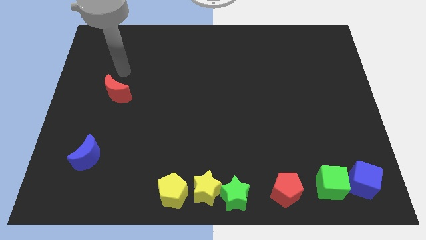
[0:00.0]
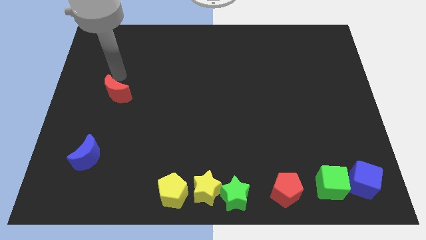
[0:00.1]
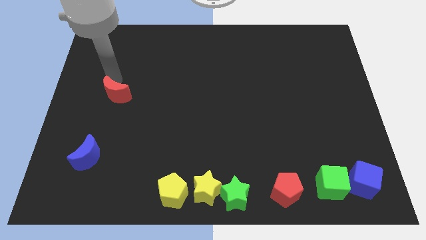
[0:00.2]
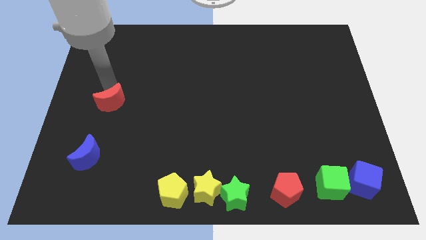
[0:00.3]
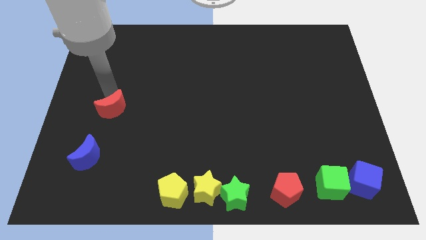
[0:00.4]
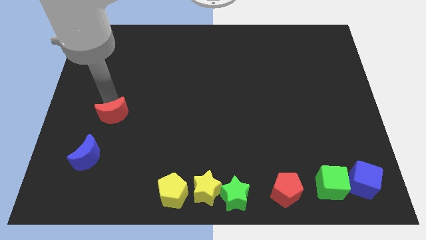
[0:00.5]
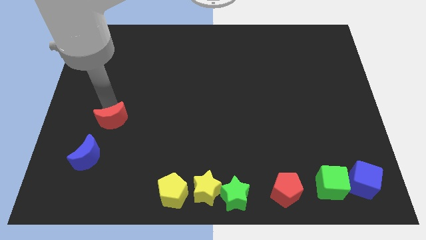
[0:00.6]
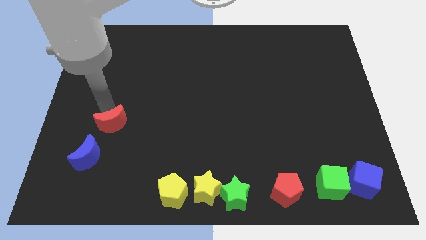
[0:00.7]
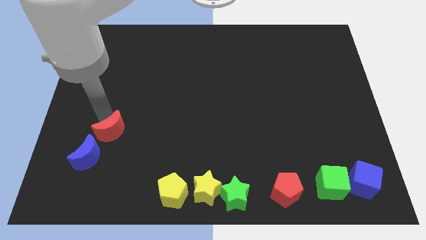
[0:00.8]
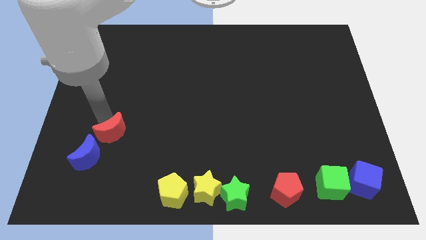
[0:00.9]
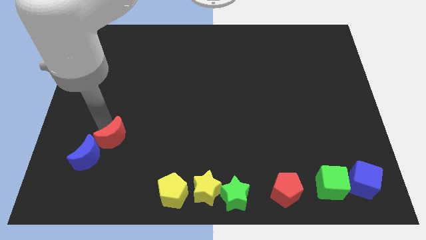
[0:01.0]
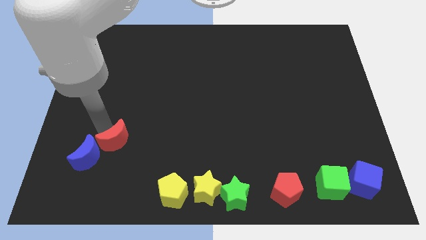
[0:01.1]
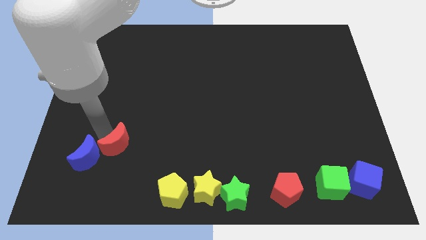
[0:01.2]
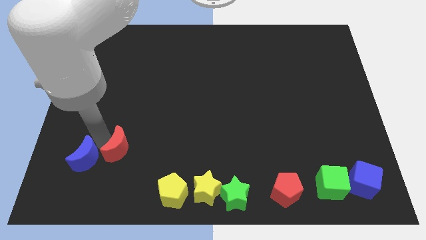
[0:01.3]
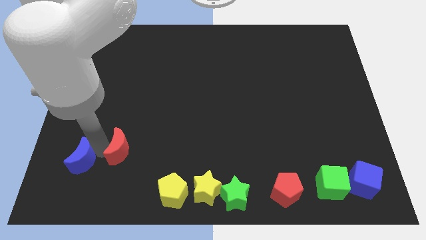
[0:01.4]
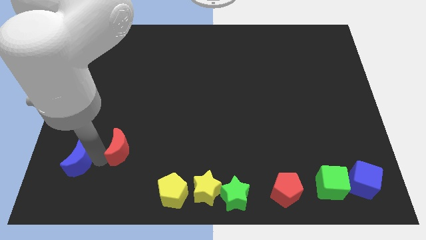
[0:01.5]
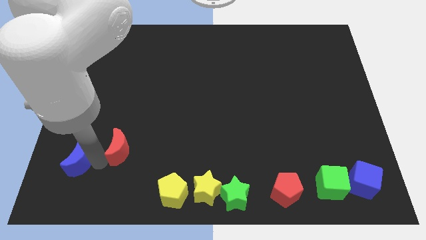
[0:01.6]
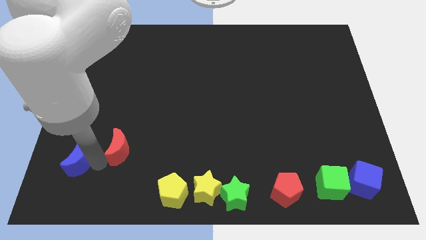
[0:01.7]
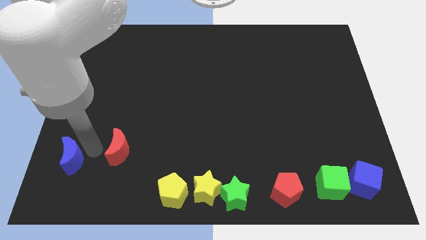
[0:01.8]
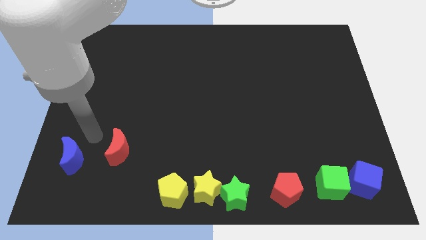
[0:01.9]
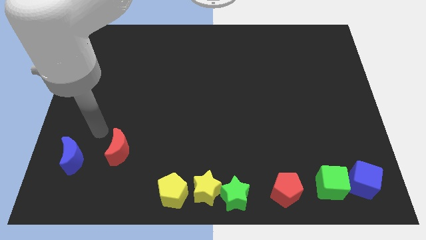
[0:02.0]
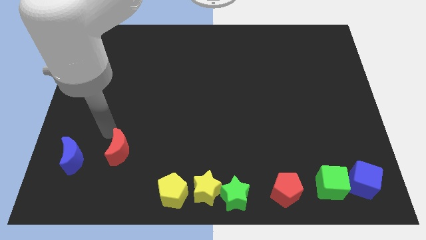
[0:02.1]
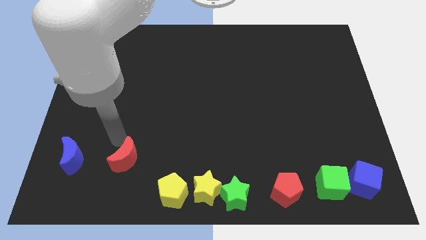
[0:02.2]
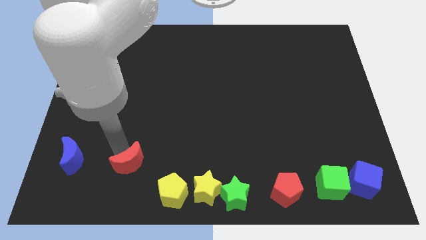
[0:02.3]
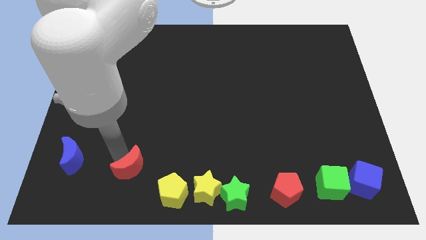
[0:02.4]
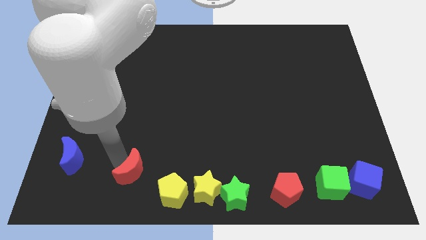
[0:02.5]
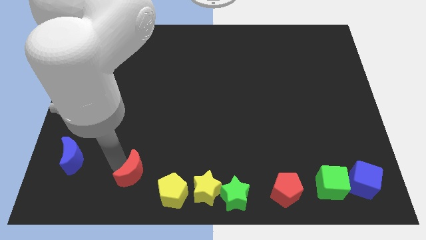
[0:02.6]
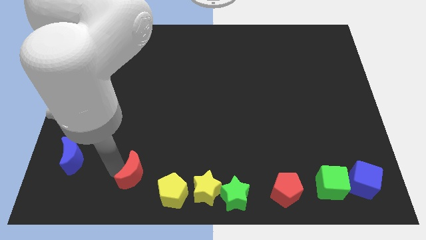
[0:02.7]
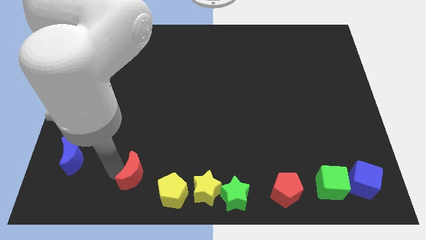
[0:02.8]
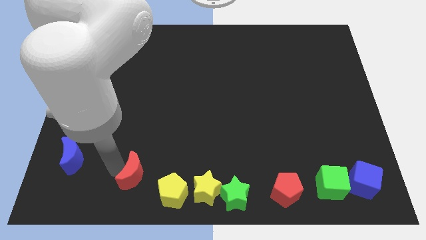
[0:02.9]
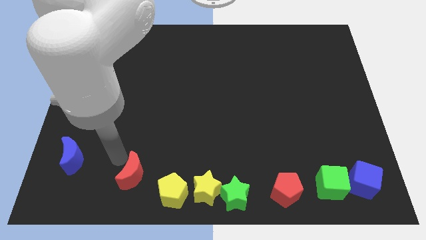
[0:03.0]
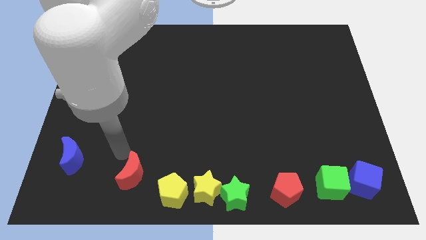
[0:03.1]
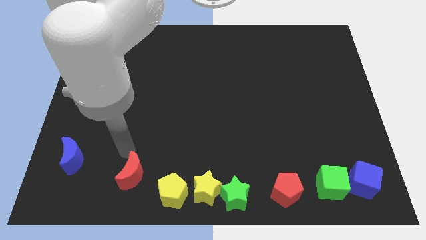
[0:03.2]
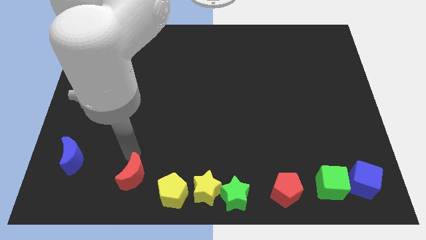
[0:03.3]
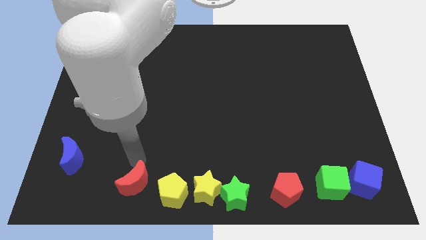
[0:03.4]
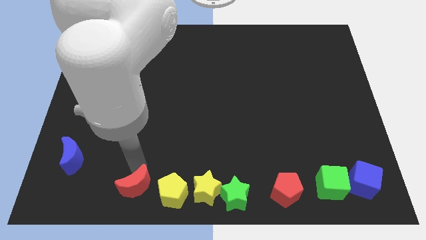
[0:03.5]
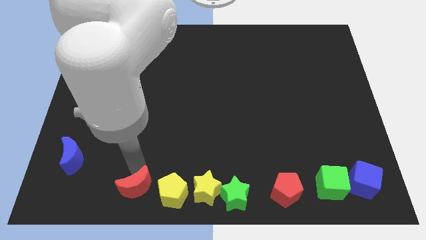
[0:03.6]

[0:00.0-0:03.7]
put the red crescent diagonally bottom right to the blue moon

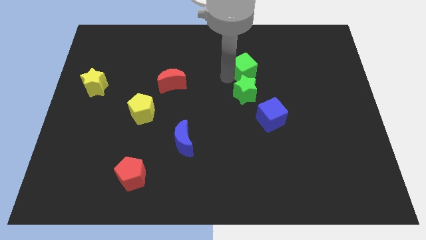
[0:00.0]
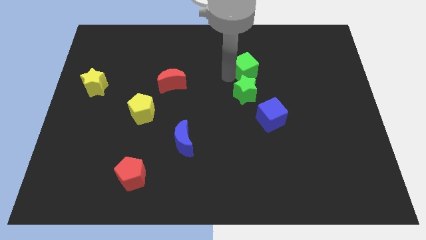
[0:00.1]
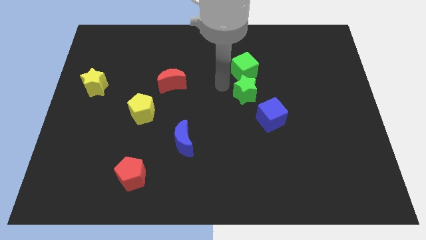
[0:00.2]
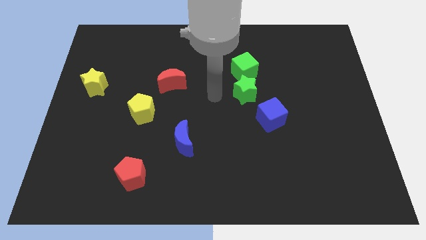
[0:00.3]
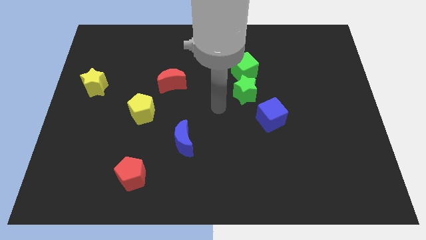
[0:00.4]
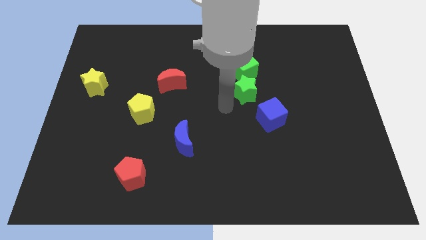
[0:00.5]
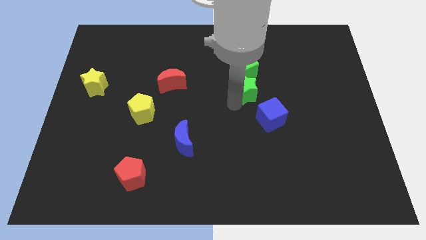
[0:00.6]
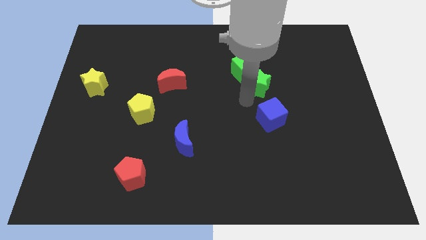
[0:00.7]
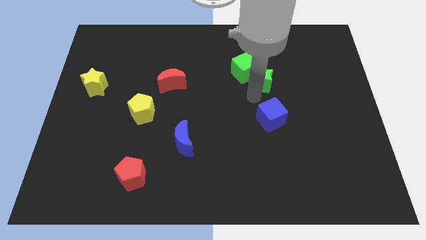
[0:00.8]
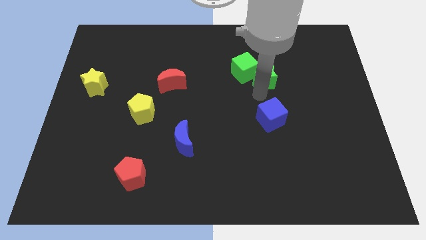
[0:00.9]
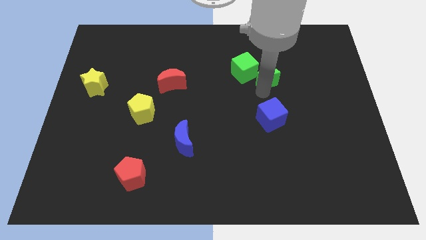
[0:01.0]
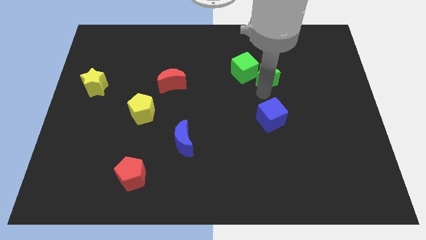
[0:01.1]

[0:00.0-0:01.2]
place the green star diagonally bottom right of the green cube

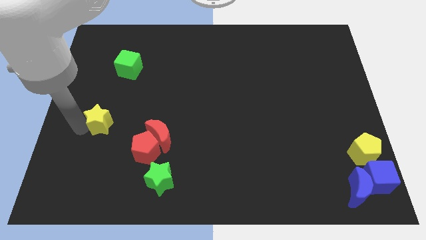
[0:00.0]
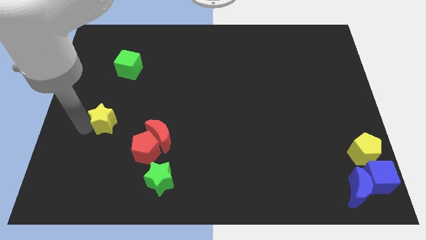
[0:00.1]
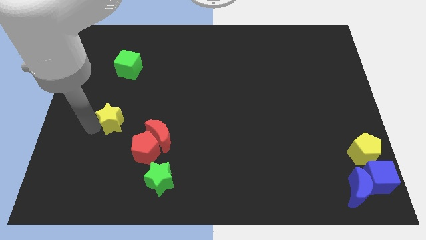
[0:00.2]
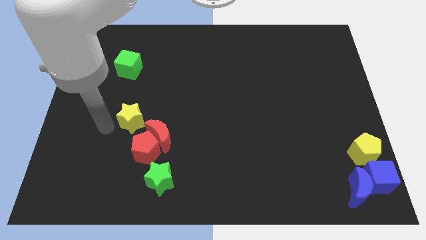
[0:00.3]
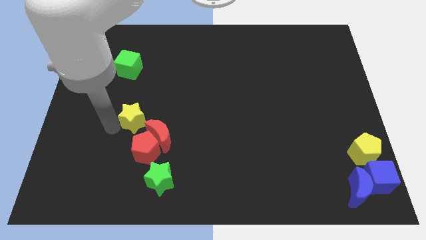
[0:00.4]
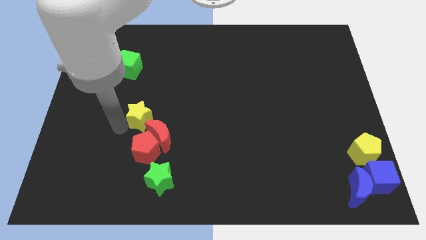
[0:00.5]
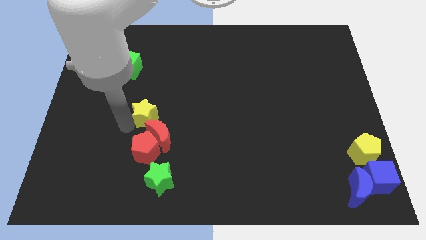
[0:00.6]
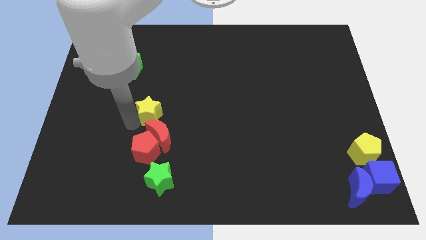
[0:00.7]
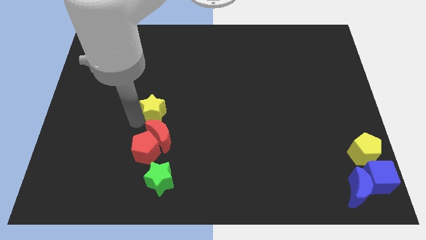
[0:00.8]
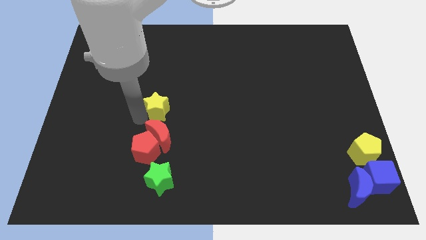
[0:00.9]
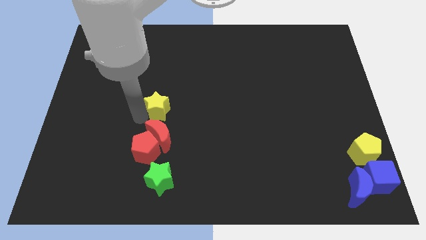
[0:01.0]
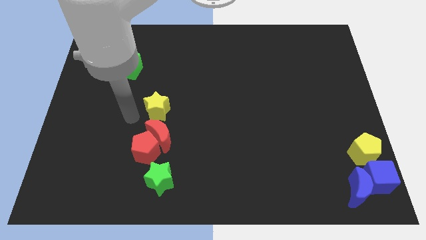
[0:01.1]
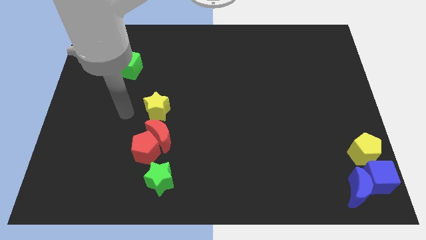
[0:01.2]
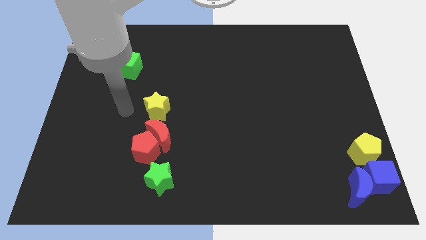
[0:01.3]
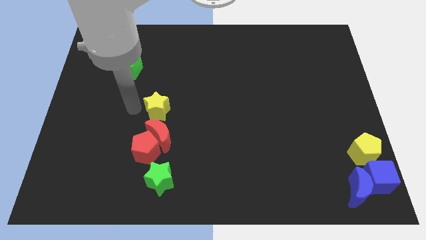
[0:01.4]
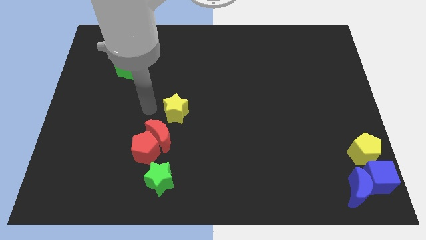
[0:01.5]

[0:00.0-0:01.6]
place yellow star above red crescent

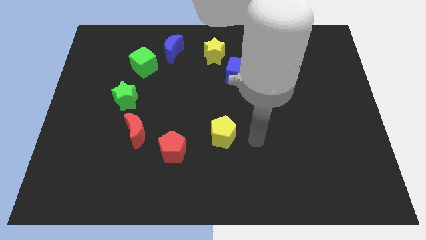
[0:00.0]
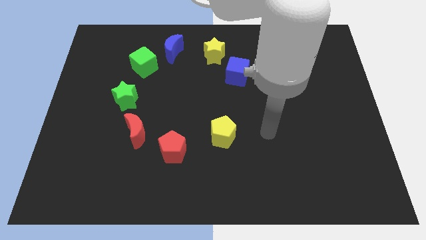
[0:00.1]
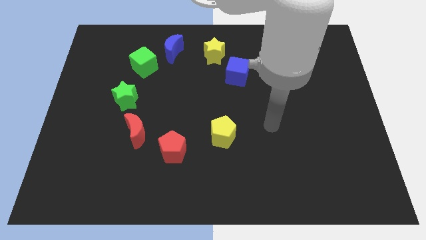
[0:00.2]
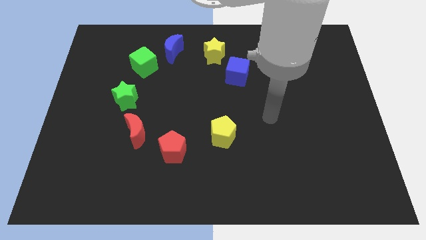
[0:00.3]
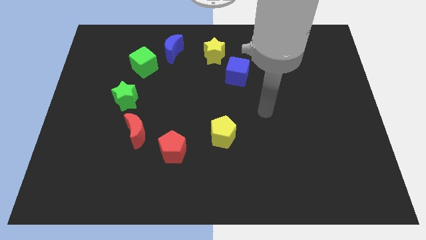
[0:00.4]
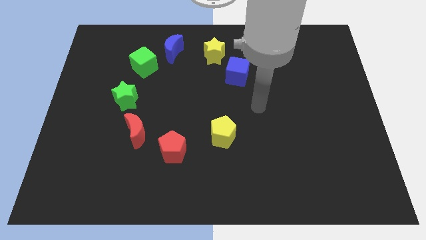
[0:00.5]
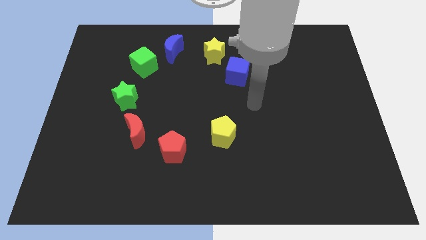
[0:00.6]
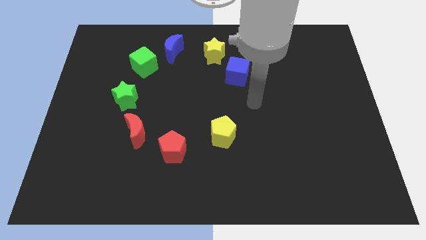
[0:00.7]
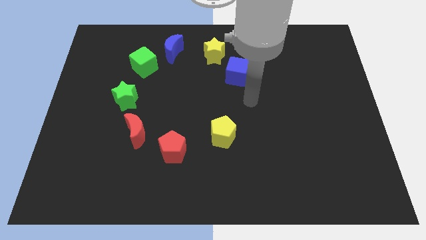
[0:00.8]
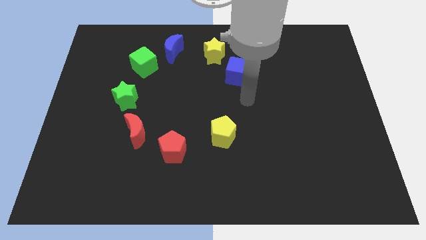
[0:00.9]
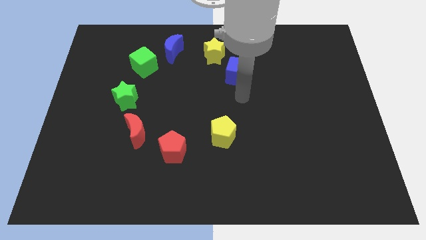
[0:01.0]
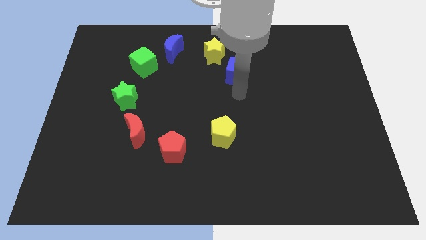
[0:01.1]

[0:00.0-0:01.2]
move your arm away from yellow pentagon

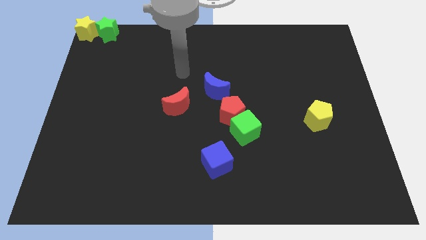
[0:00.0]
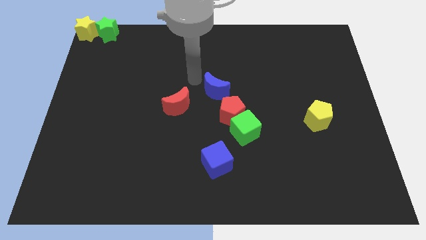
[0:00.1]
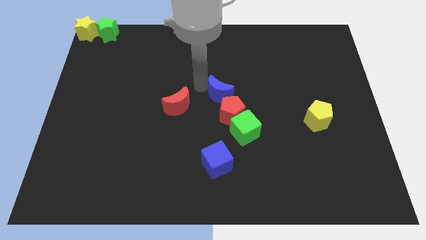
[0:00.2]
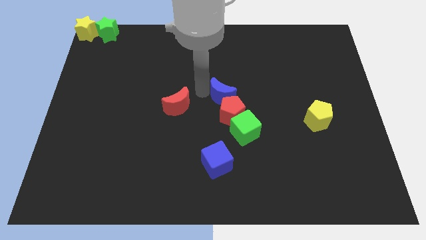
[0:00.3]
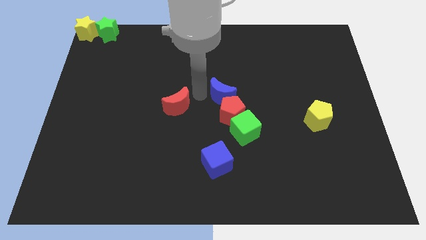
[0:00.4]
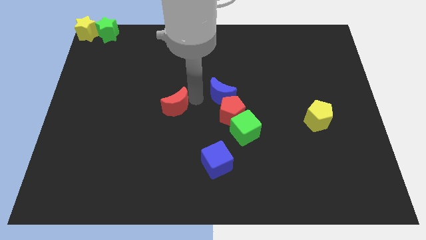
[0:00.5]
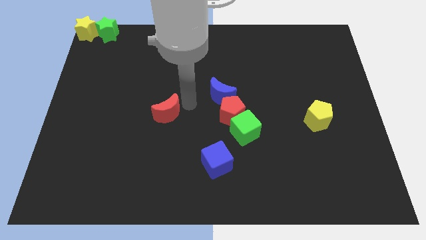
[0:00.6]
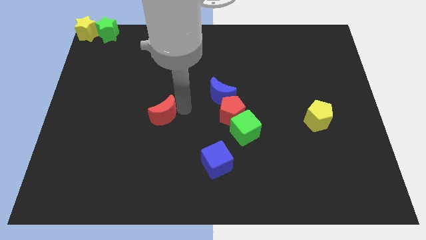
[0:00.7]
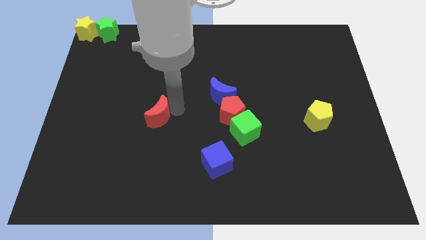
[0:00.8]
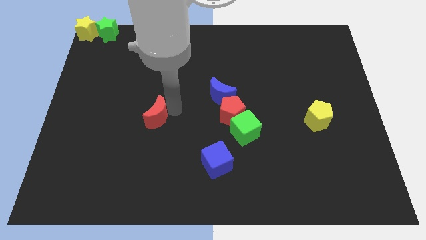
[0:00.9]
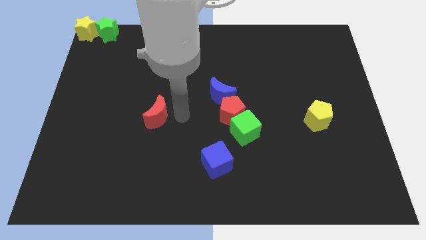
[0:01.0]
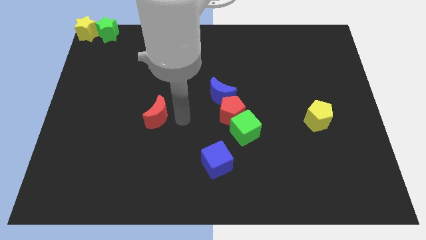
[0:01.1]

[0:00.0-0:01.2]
separate the red moon and blue moon
